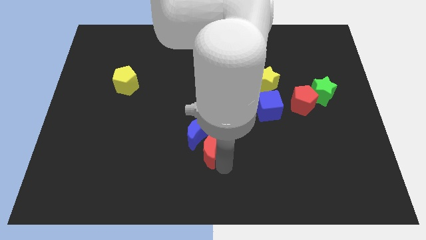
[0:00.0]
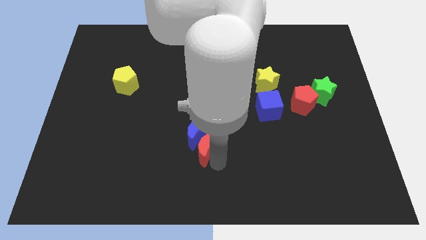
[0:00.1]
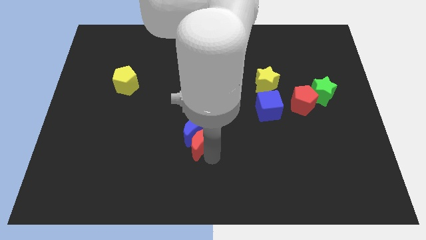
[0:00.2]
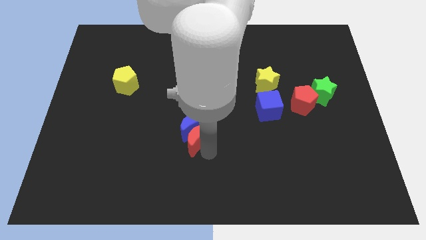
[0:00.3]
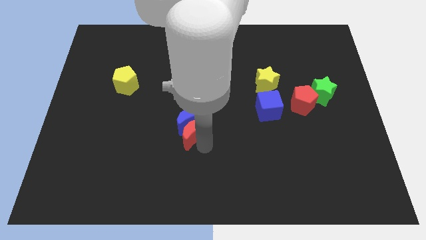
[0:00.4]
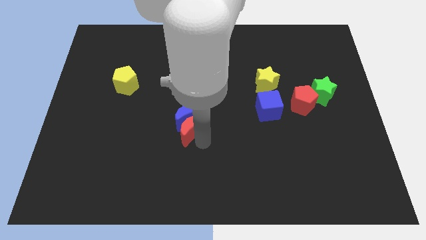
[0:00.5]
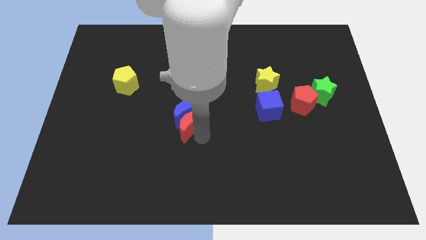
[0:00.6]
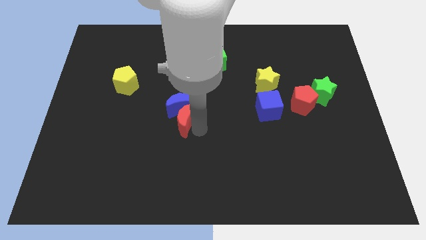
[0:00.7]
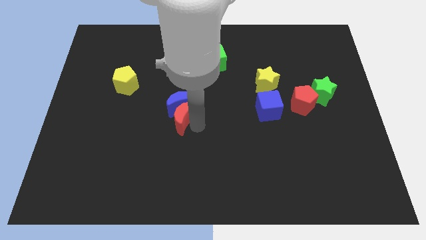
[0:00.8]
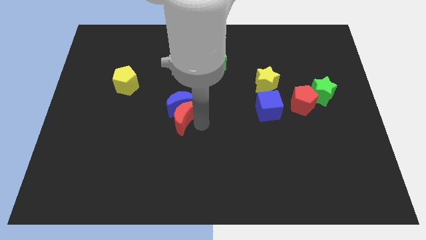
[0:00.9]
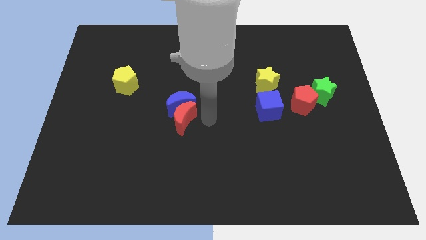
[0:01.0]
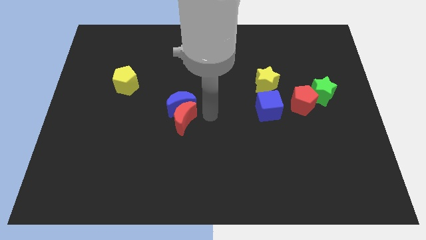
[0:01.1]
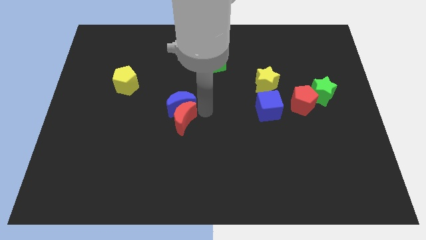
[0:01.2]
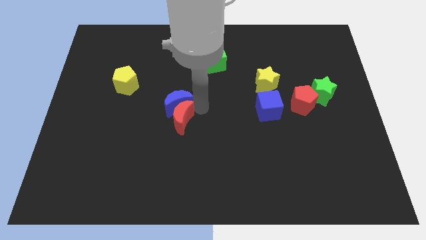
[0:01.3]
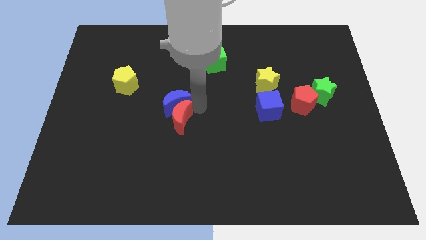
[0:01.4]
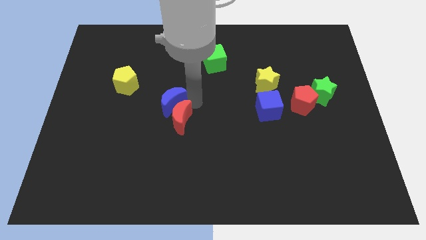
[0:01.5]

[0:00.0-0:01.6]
push the red crescent into the blue crescent towards the center of the board

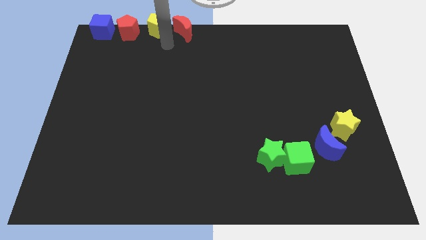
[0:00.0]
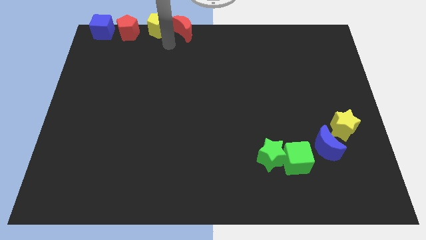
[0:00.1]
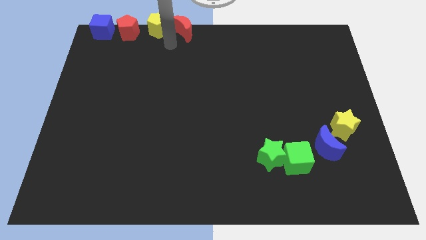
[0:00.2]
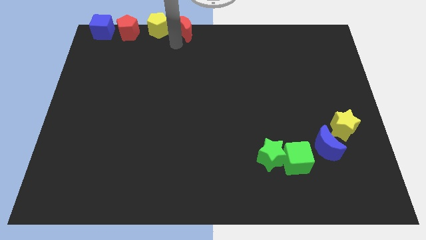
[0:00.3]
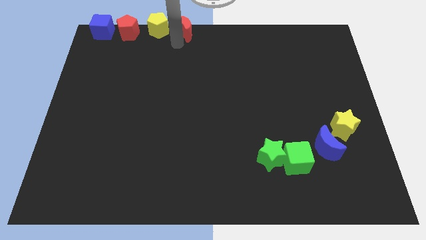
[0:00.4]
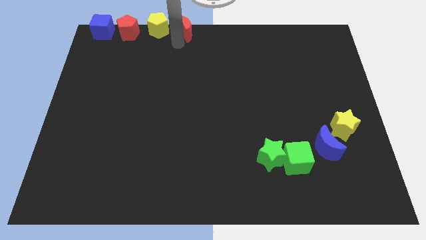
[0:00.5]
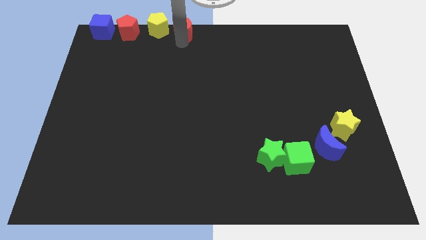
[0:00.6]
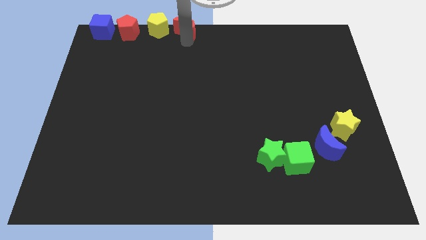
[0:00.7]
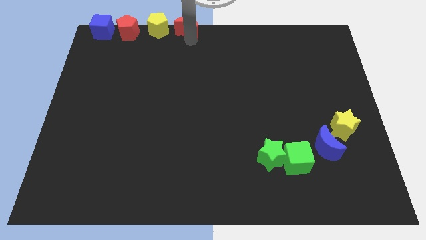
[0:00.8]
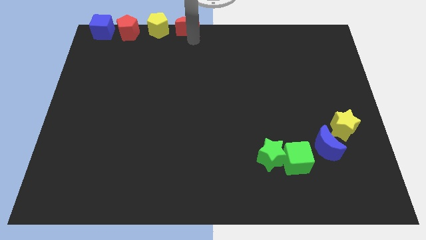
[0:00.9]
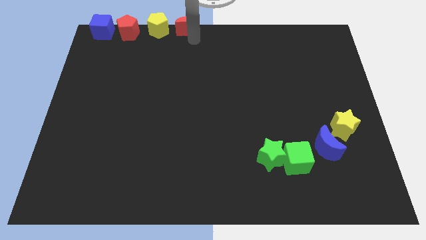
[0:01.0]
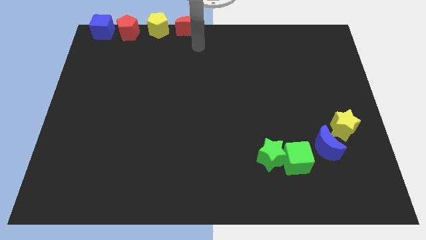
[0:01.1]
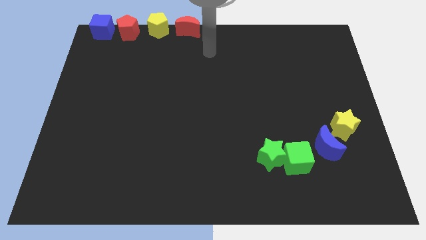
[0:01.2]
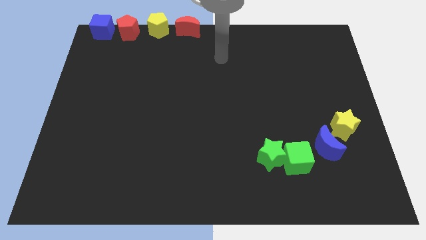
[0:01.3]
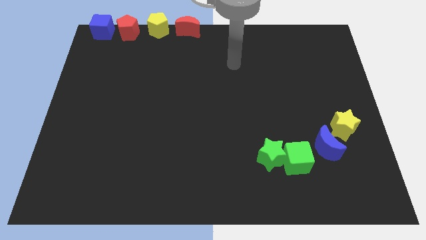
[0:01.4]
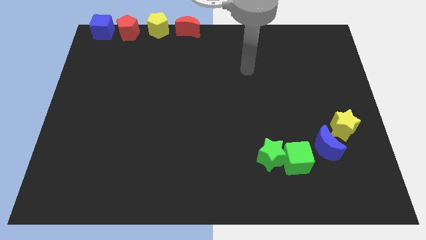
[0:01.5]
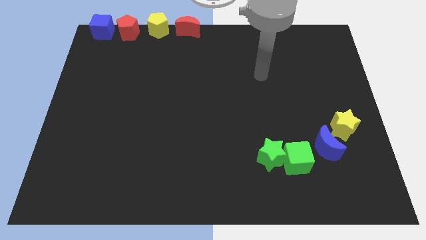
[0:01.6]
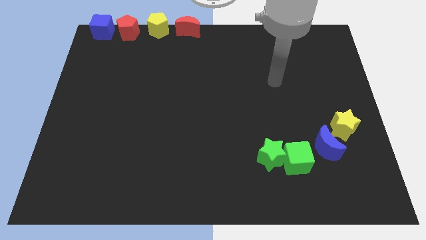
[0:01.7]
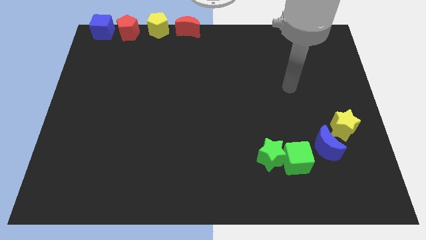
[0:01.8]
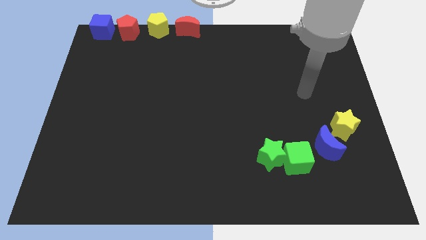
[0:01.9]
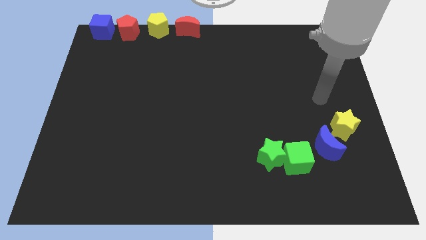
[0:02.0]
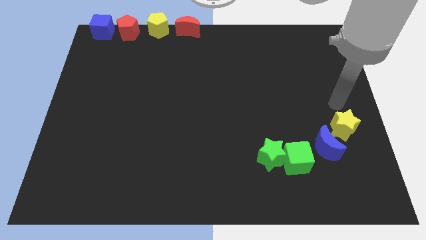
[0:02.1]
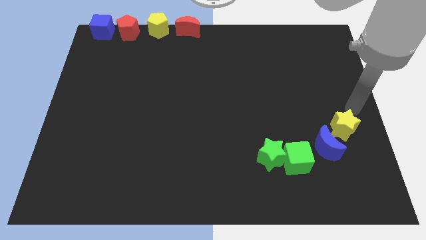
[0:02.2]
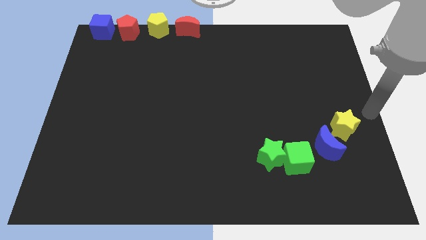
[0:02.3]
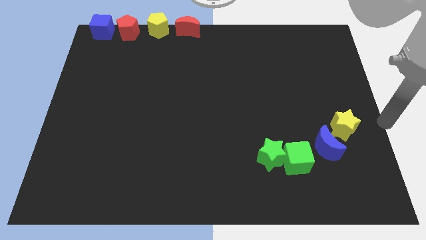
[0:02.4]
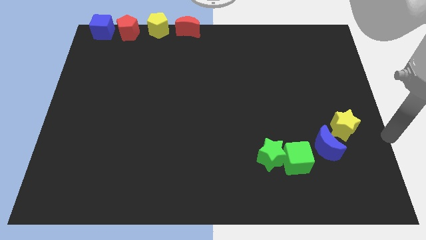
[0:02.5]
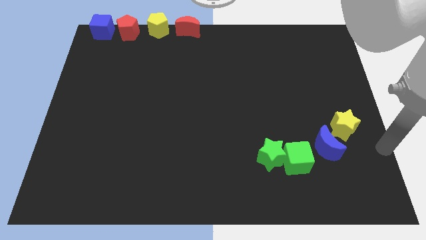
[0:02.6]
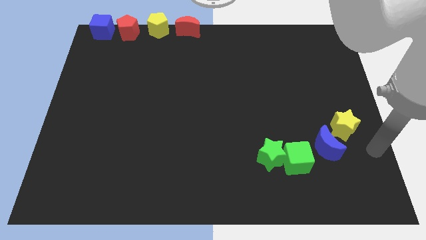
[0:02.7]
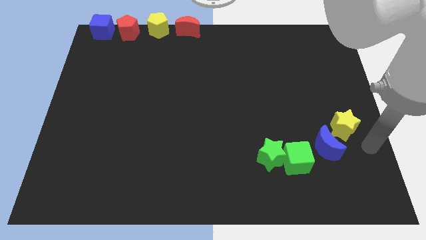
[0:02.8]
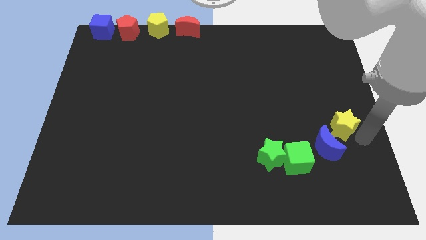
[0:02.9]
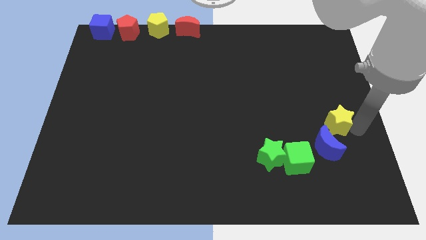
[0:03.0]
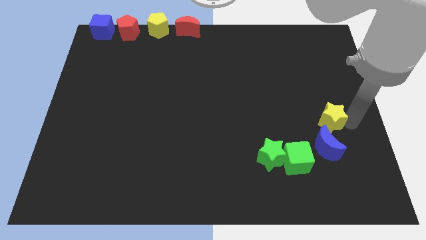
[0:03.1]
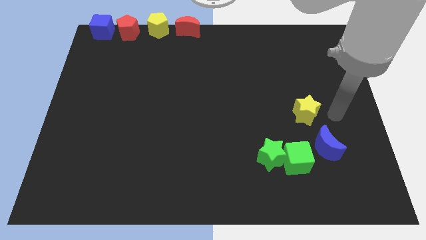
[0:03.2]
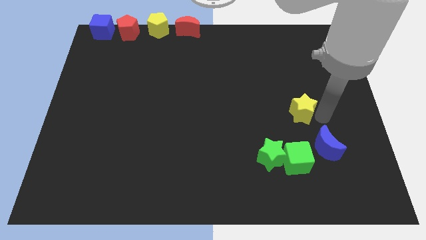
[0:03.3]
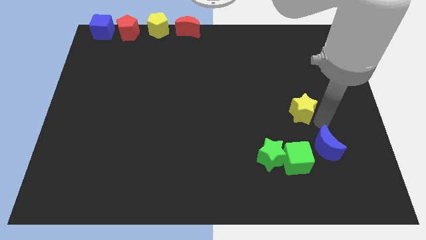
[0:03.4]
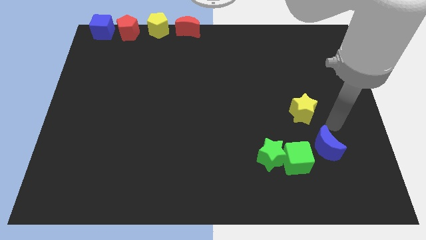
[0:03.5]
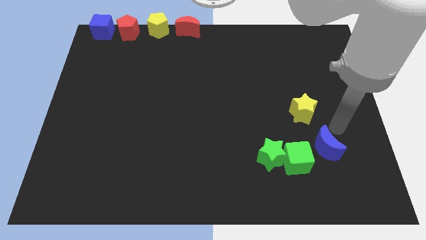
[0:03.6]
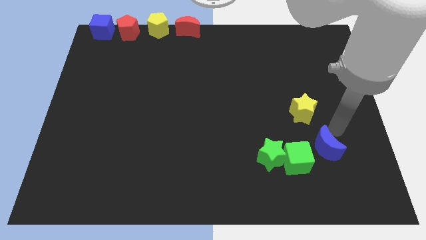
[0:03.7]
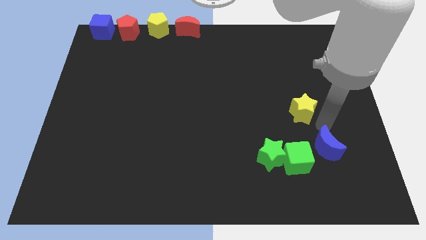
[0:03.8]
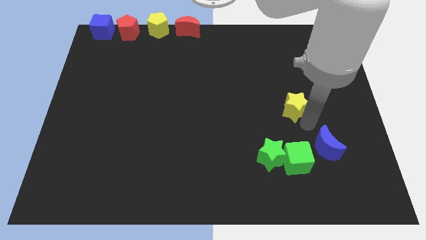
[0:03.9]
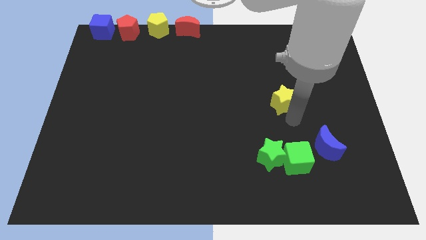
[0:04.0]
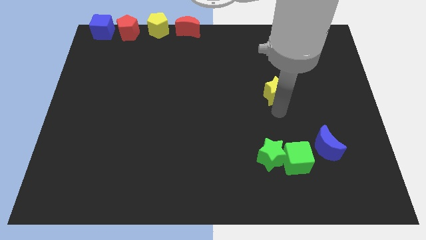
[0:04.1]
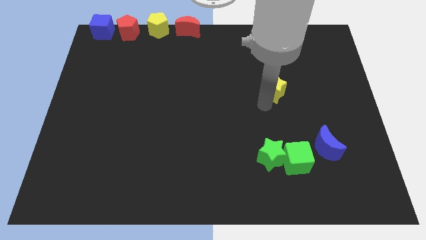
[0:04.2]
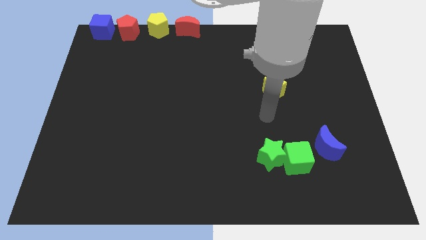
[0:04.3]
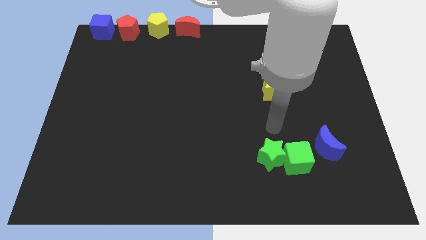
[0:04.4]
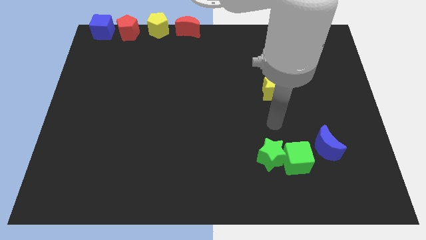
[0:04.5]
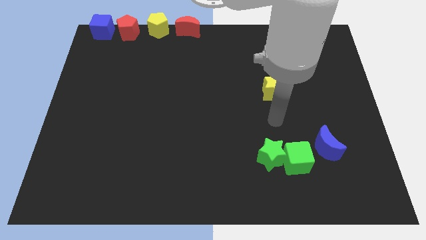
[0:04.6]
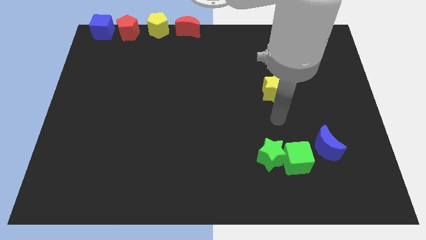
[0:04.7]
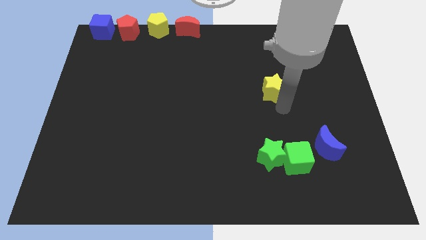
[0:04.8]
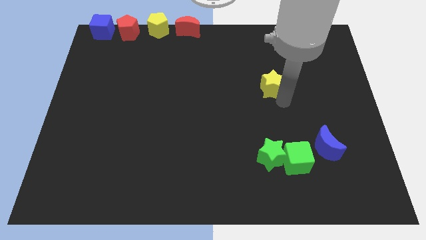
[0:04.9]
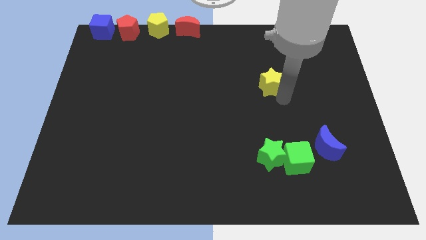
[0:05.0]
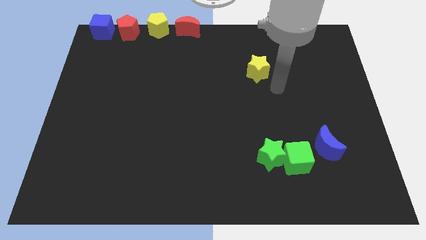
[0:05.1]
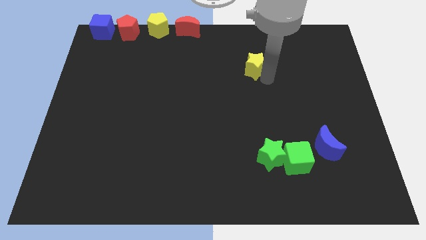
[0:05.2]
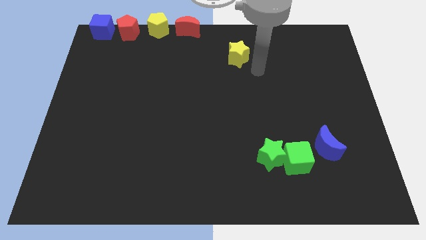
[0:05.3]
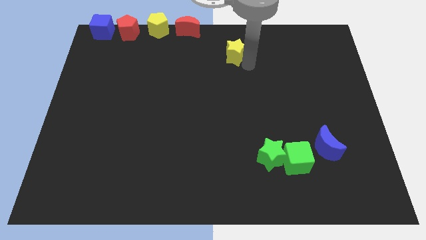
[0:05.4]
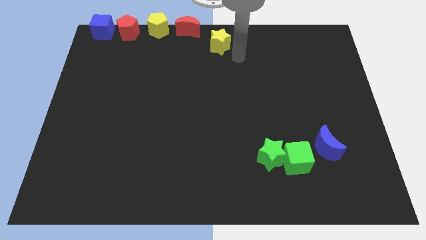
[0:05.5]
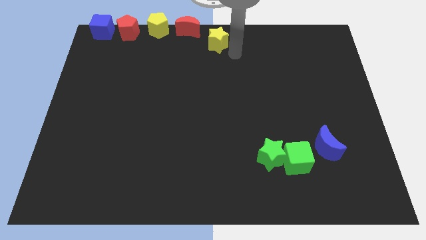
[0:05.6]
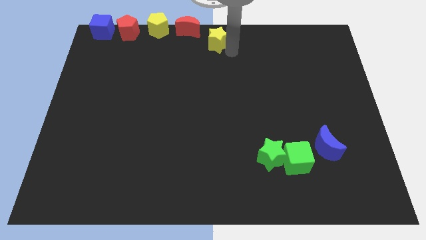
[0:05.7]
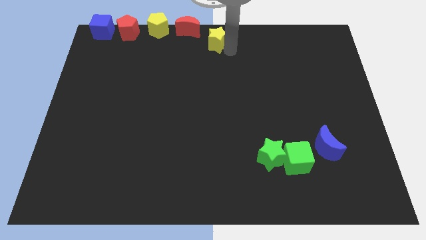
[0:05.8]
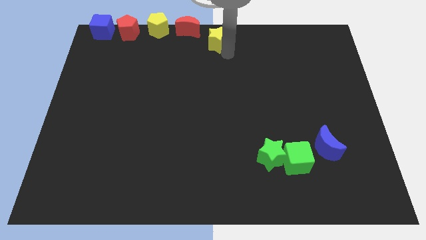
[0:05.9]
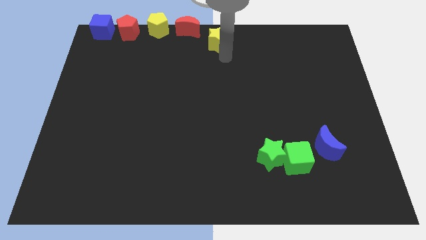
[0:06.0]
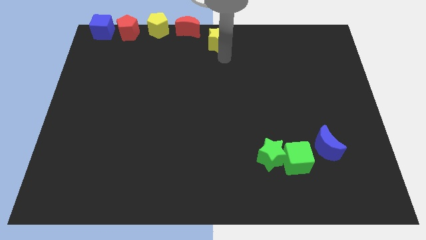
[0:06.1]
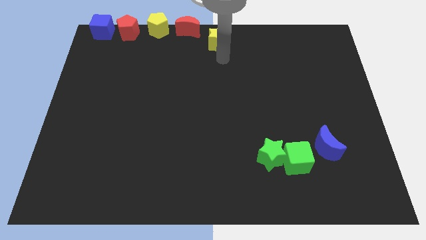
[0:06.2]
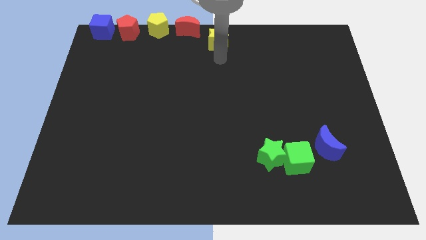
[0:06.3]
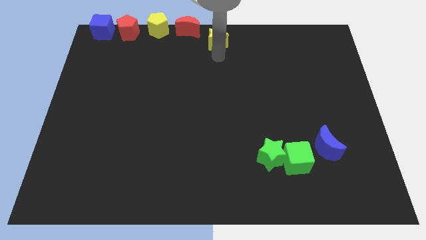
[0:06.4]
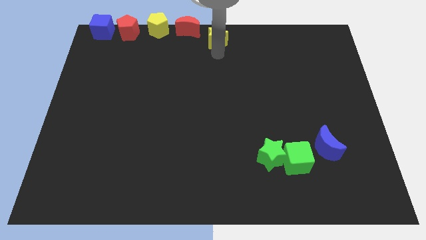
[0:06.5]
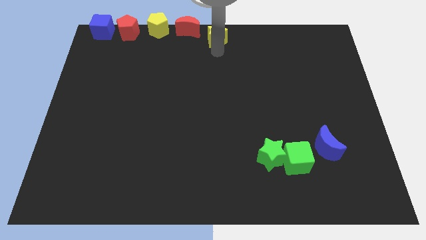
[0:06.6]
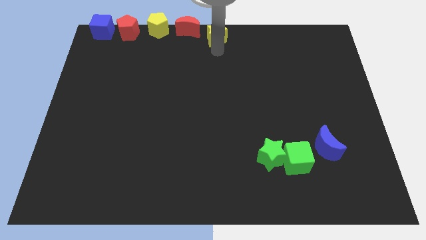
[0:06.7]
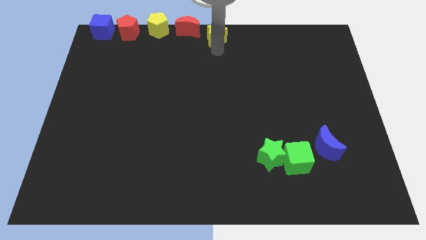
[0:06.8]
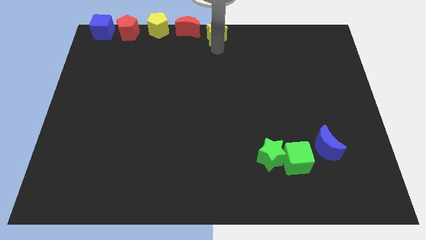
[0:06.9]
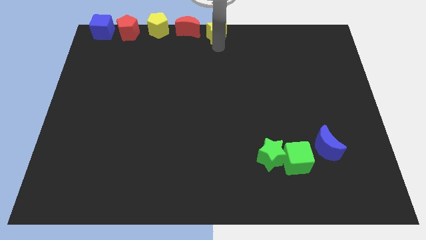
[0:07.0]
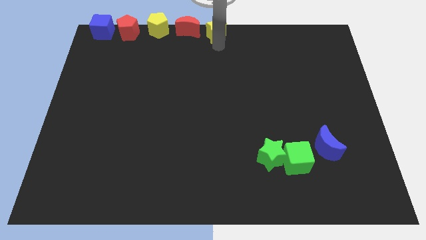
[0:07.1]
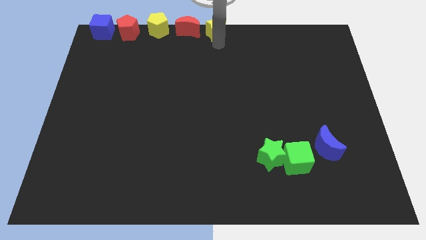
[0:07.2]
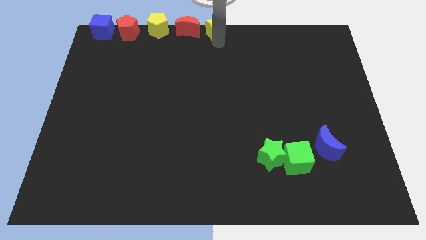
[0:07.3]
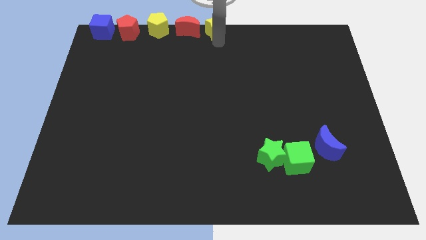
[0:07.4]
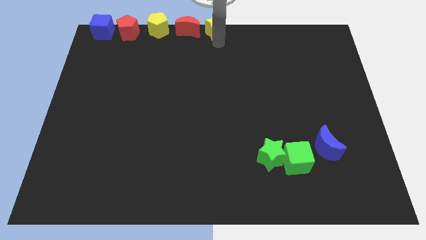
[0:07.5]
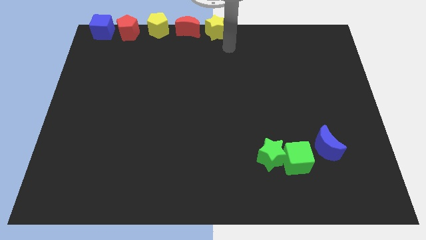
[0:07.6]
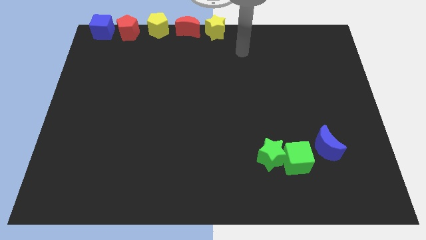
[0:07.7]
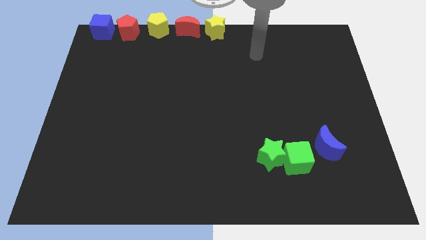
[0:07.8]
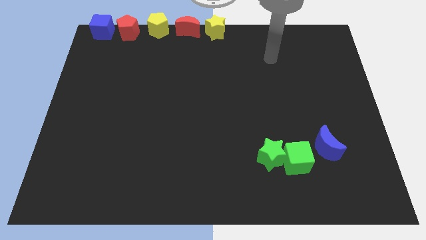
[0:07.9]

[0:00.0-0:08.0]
move the yellow star to the top center of the board
